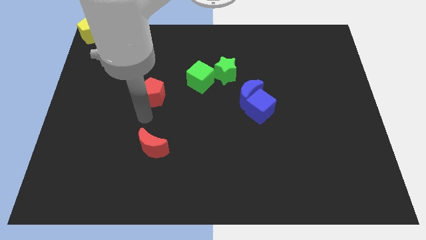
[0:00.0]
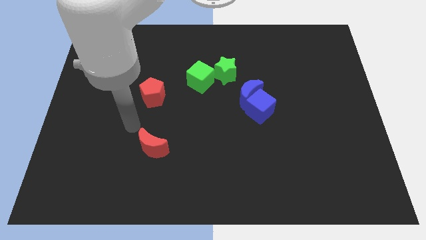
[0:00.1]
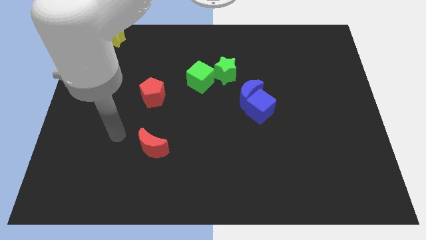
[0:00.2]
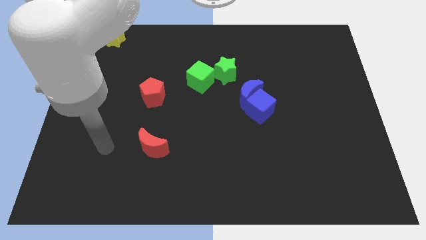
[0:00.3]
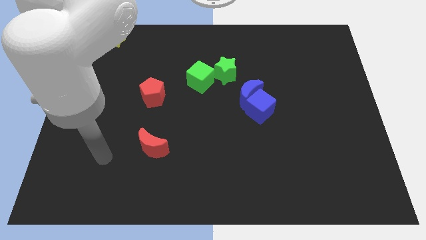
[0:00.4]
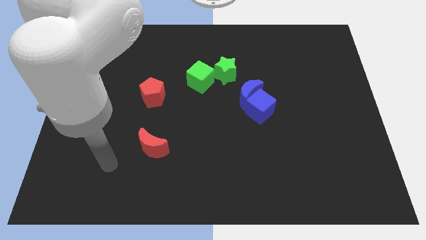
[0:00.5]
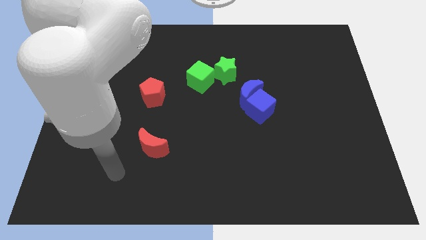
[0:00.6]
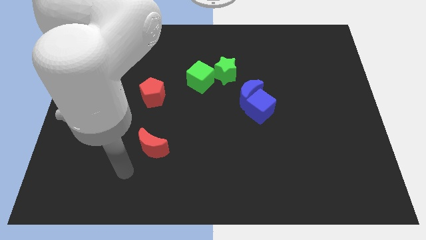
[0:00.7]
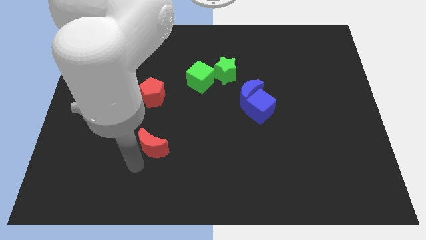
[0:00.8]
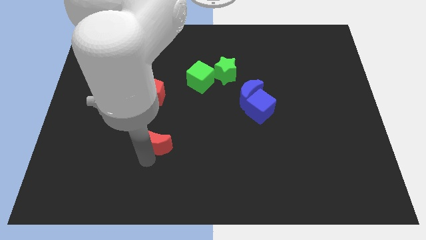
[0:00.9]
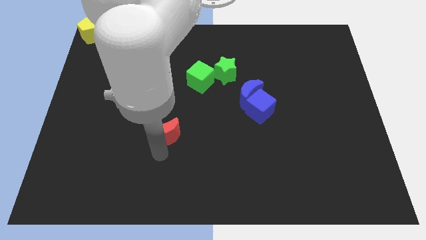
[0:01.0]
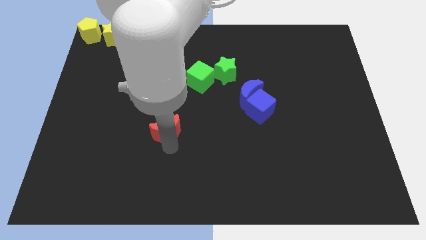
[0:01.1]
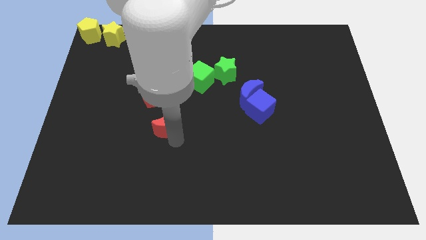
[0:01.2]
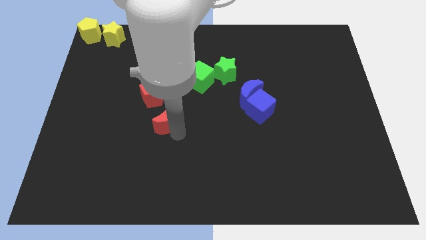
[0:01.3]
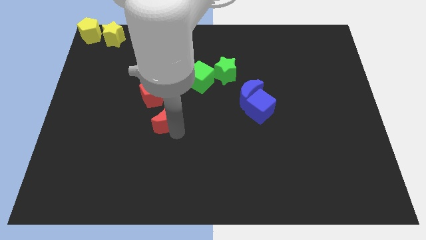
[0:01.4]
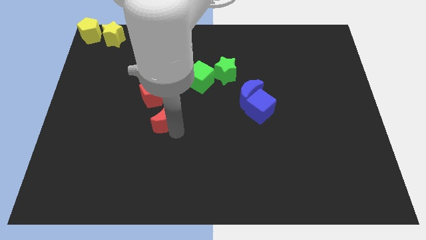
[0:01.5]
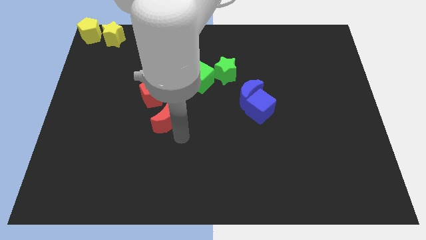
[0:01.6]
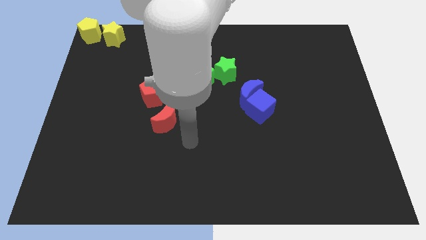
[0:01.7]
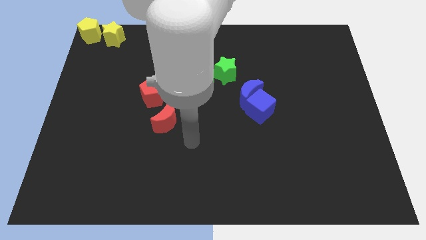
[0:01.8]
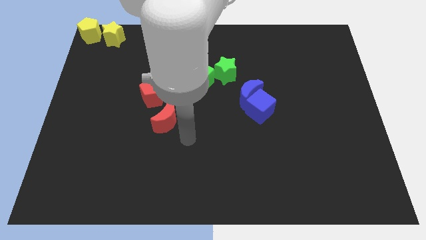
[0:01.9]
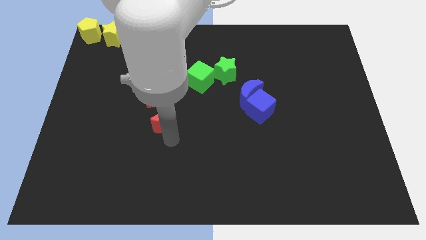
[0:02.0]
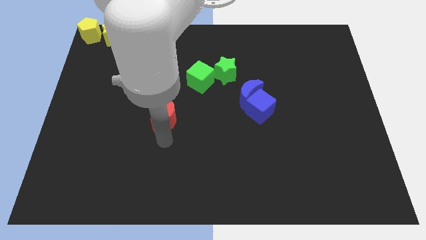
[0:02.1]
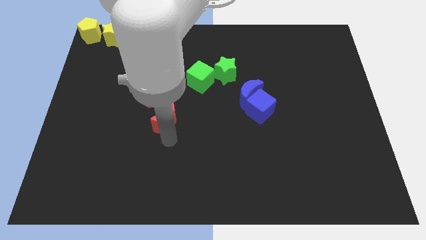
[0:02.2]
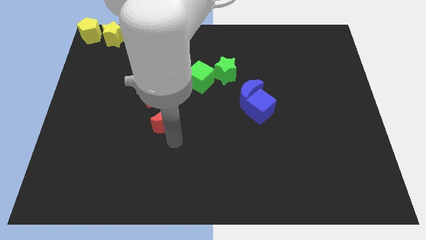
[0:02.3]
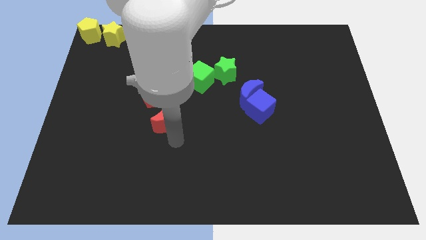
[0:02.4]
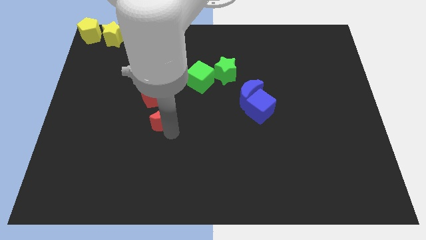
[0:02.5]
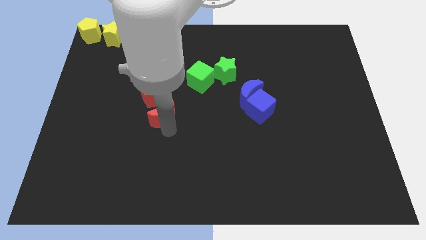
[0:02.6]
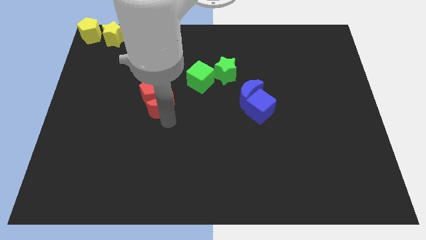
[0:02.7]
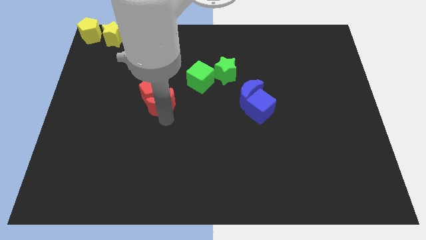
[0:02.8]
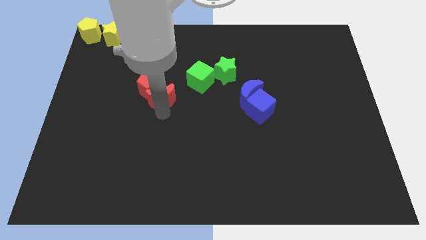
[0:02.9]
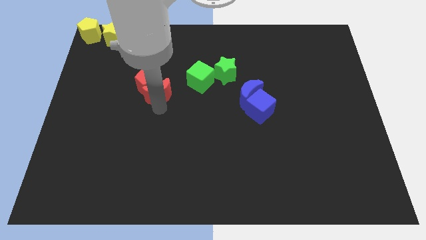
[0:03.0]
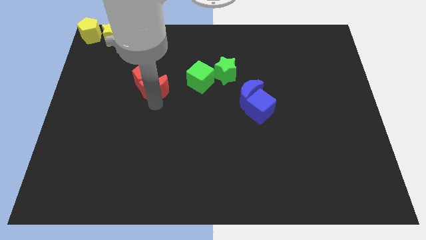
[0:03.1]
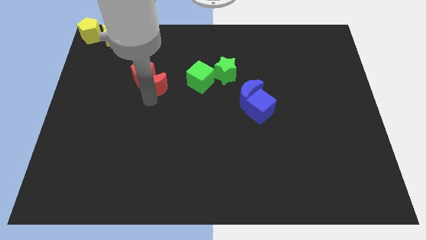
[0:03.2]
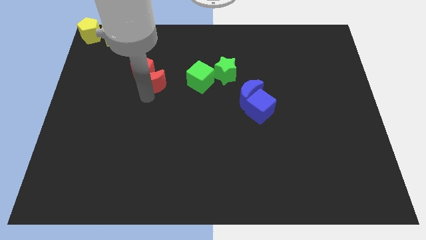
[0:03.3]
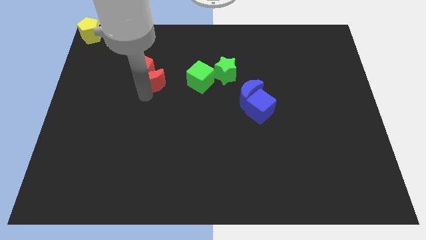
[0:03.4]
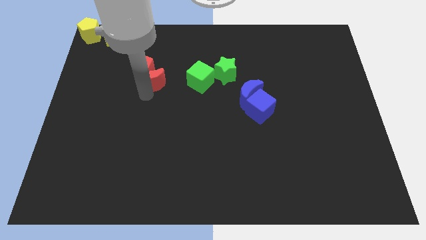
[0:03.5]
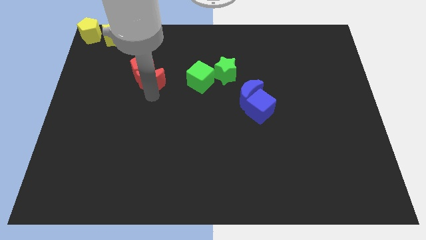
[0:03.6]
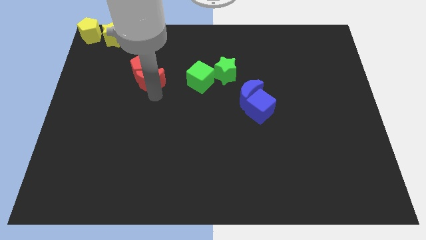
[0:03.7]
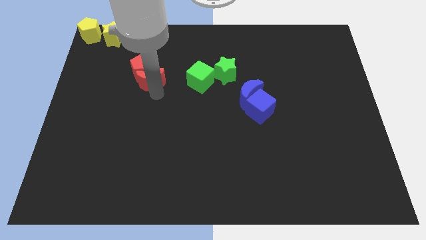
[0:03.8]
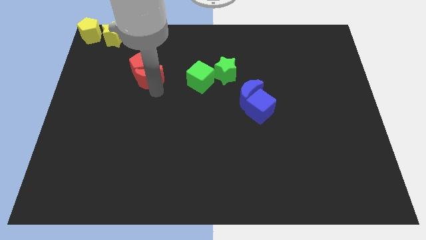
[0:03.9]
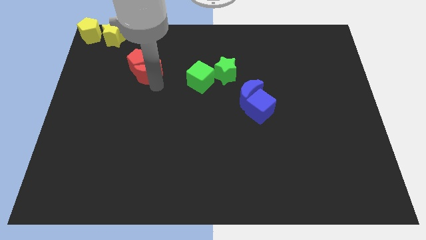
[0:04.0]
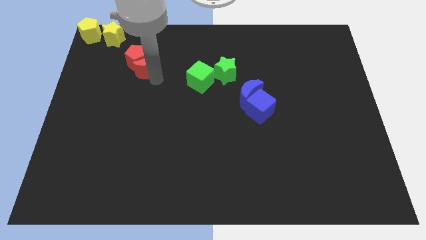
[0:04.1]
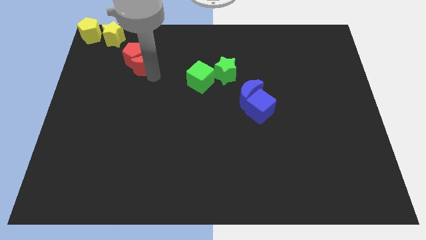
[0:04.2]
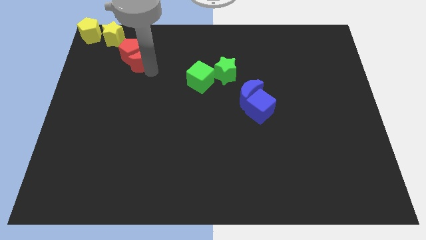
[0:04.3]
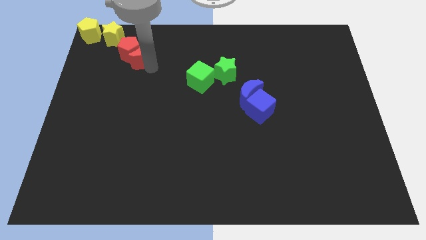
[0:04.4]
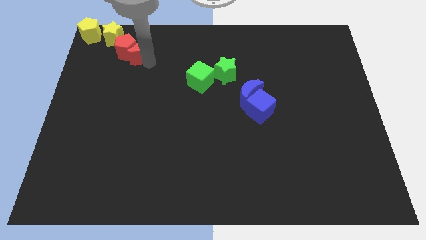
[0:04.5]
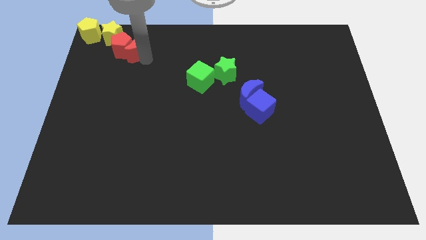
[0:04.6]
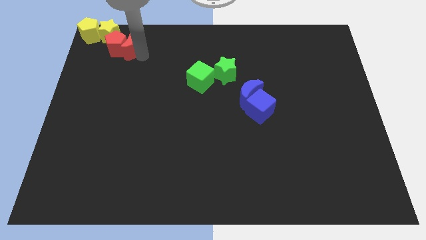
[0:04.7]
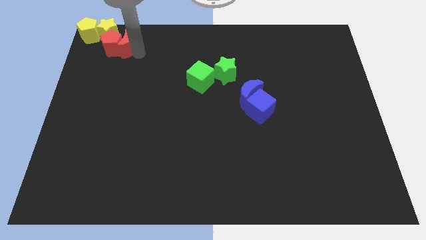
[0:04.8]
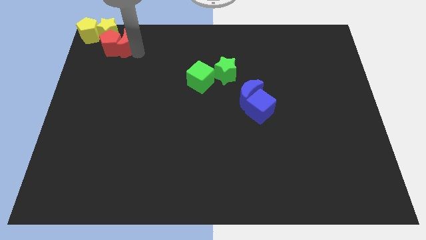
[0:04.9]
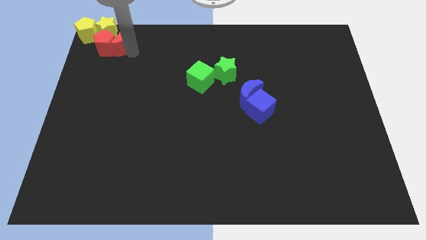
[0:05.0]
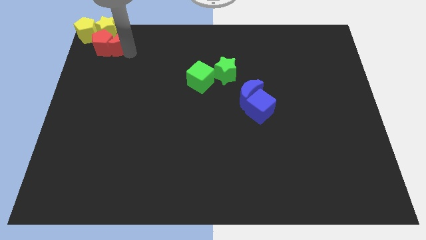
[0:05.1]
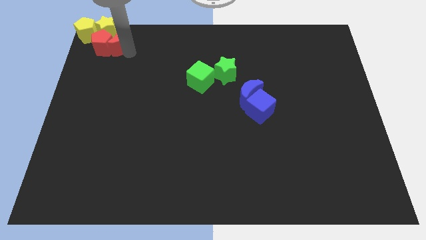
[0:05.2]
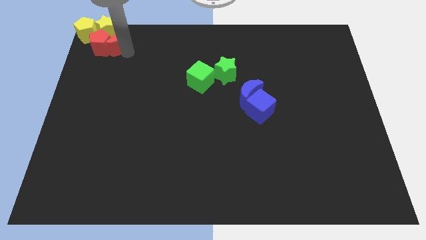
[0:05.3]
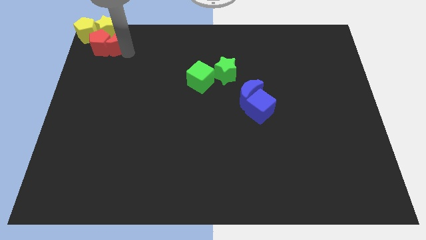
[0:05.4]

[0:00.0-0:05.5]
place the red blocks below the yellow blocks

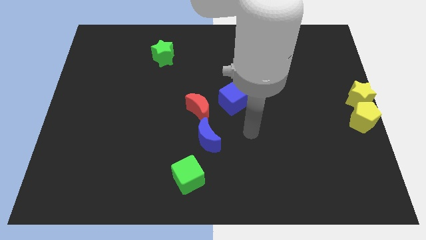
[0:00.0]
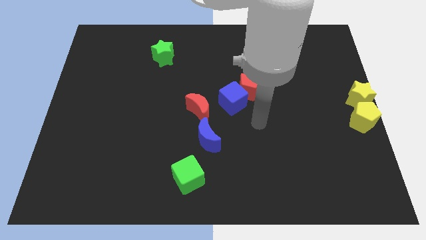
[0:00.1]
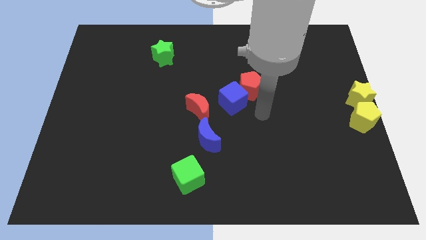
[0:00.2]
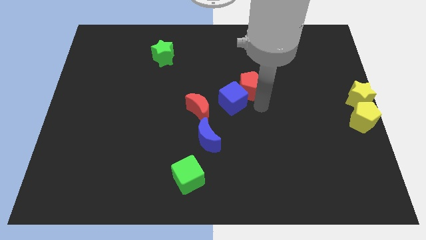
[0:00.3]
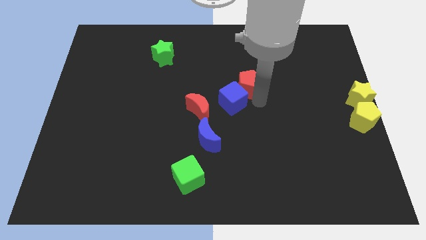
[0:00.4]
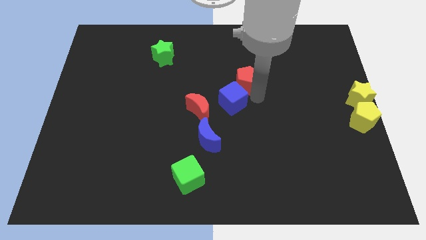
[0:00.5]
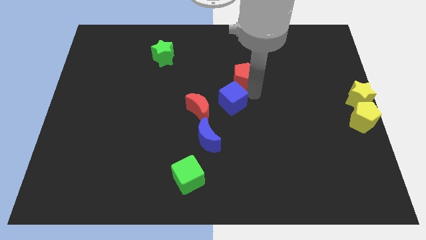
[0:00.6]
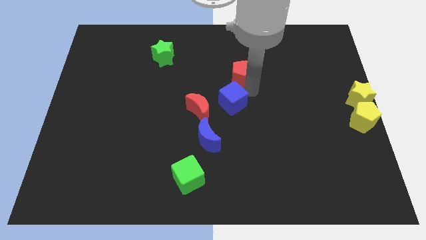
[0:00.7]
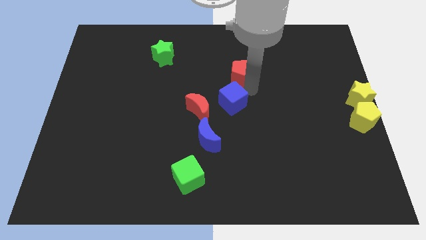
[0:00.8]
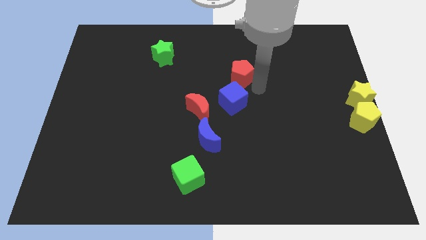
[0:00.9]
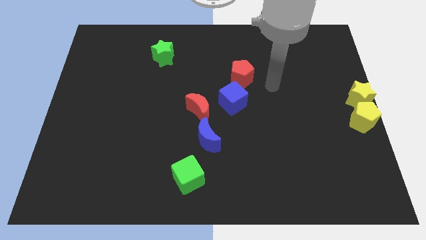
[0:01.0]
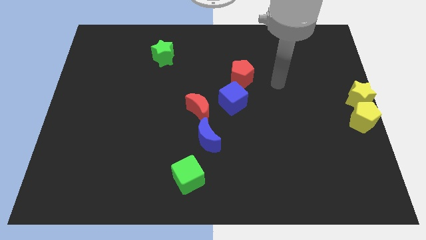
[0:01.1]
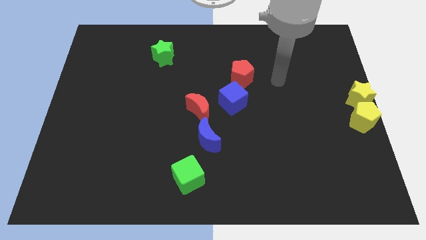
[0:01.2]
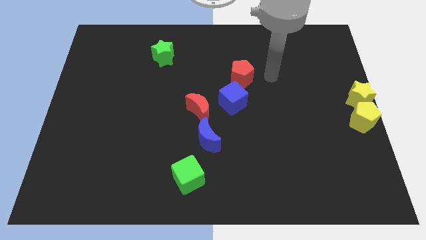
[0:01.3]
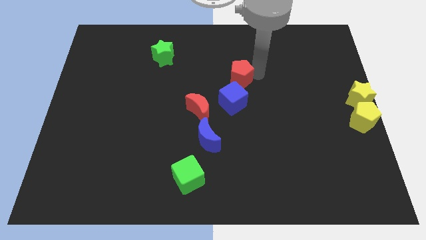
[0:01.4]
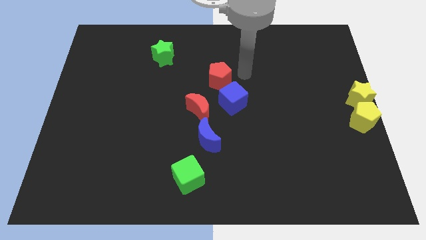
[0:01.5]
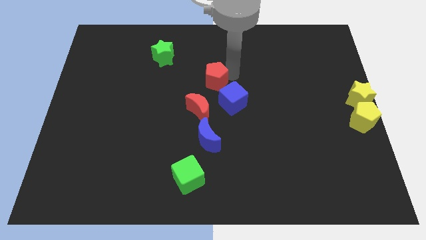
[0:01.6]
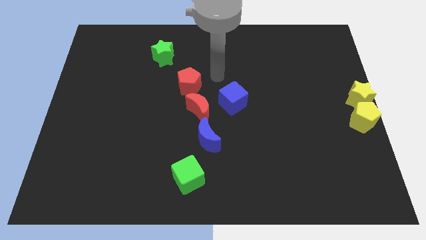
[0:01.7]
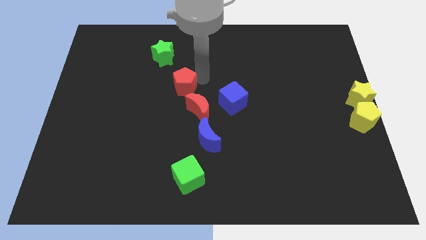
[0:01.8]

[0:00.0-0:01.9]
separate the red pentagon from the blue cube by sliding it towards the left side of the board

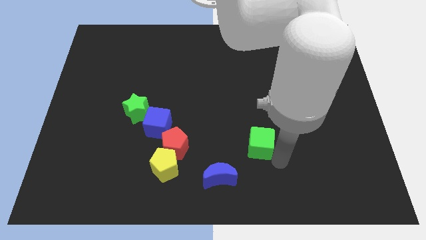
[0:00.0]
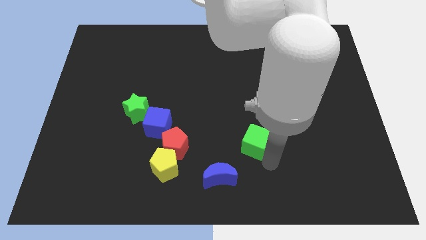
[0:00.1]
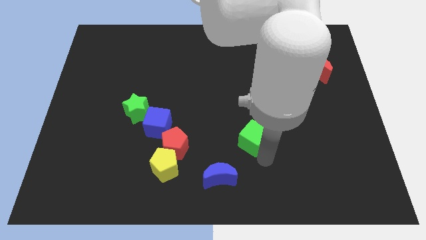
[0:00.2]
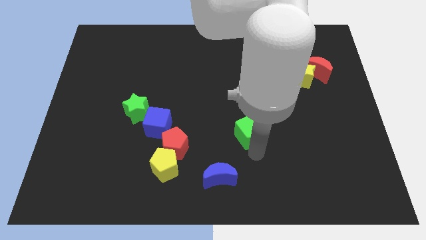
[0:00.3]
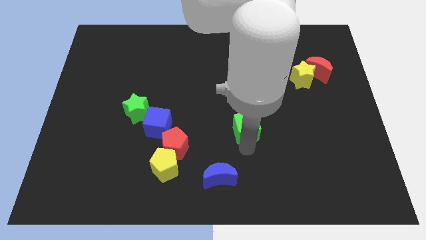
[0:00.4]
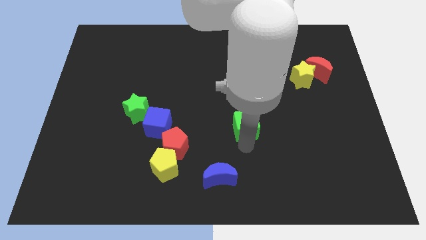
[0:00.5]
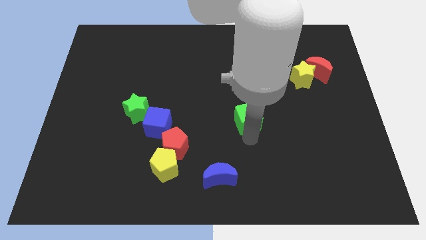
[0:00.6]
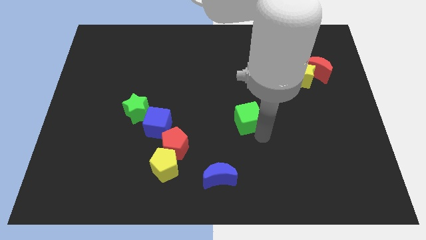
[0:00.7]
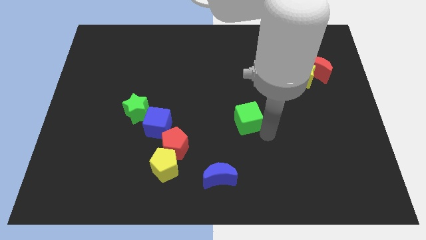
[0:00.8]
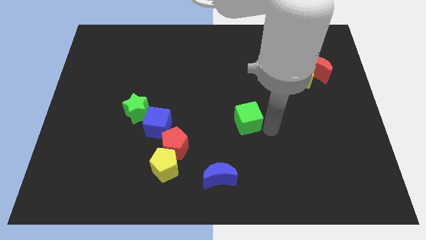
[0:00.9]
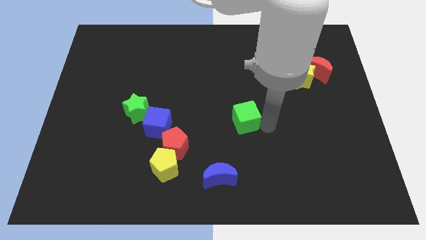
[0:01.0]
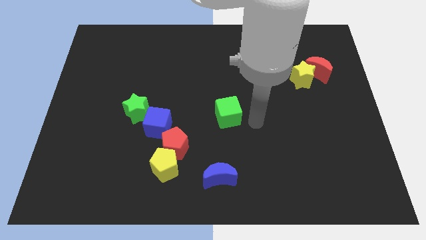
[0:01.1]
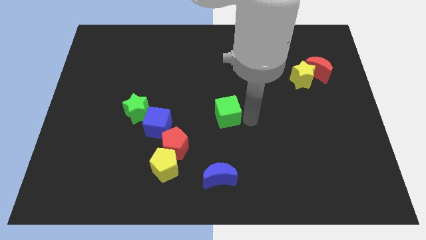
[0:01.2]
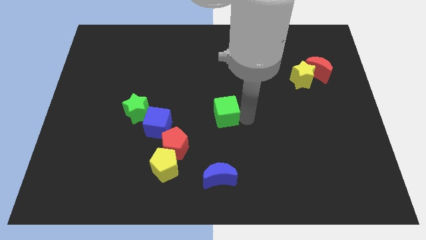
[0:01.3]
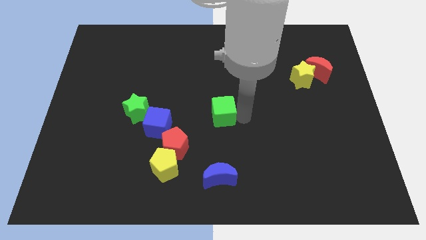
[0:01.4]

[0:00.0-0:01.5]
move the green cube upwards
